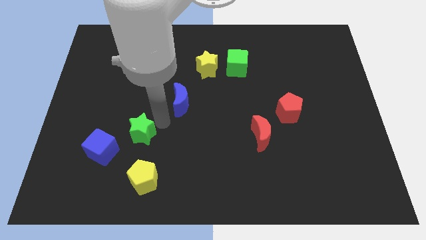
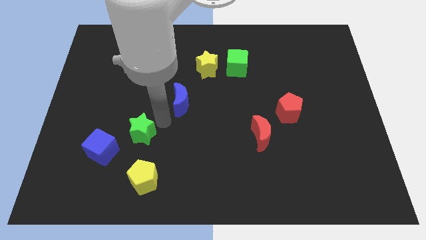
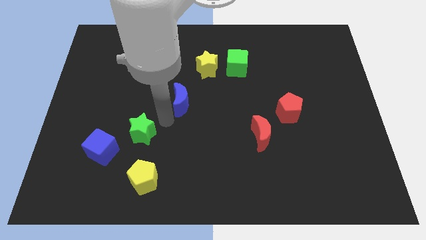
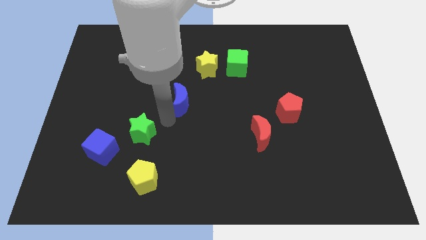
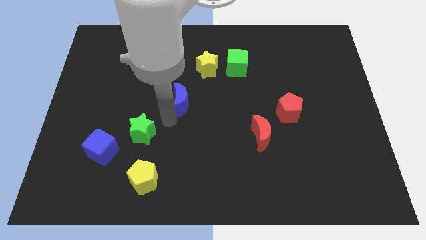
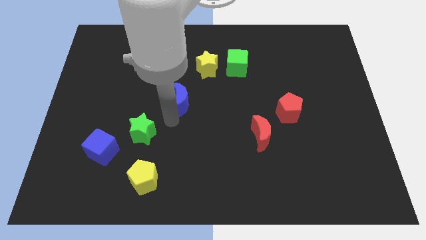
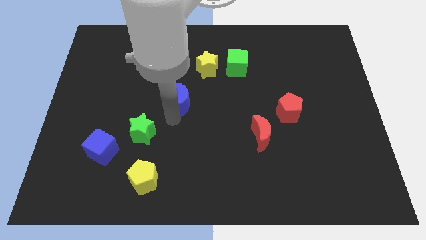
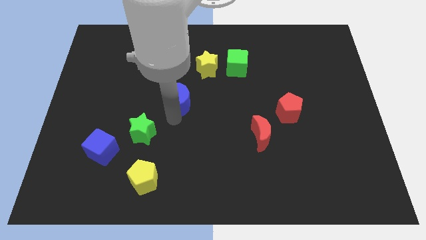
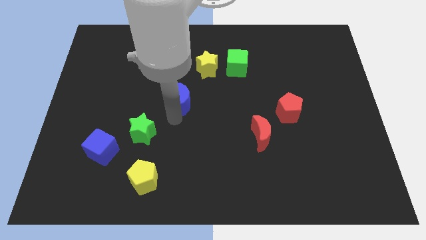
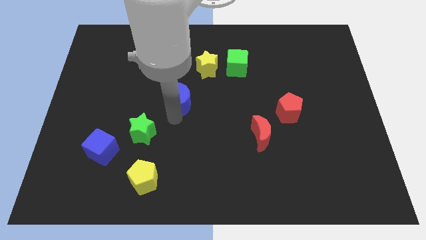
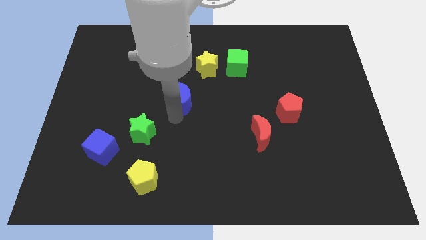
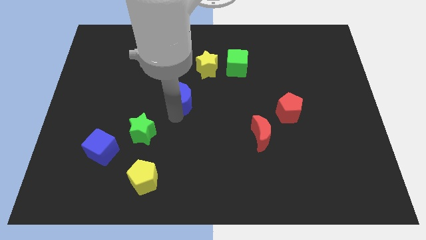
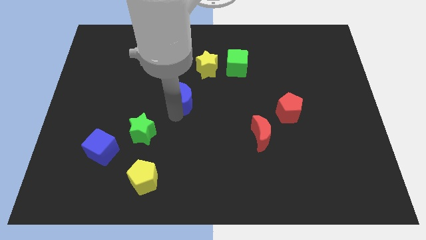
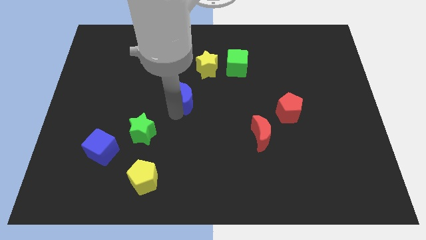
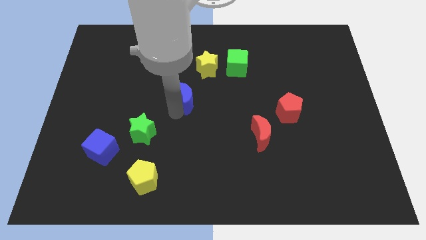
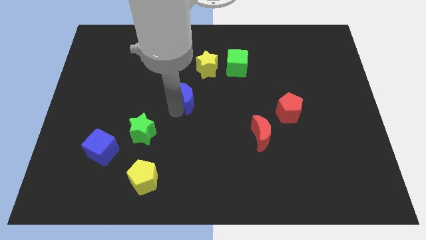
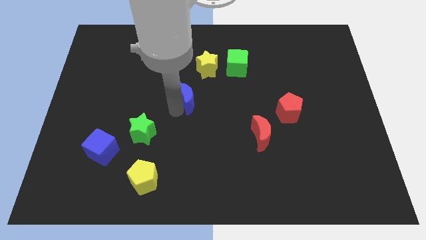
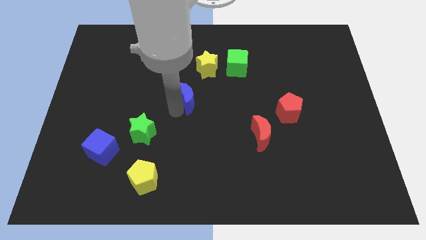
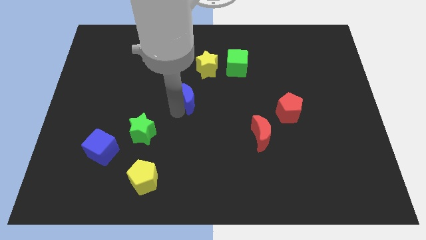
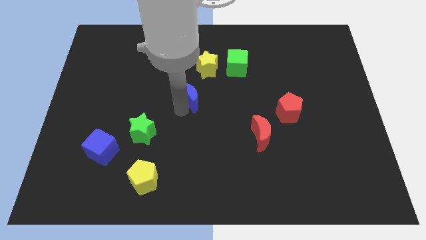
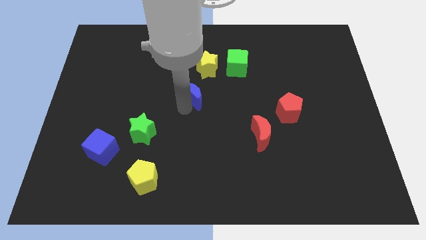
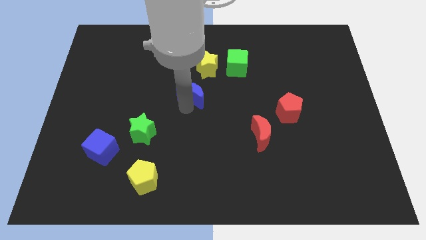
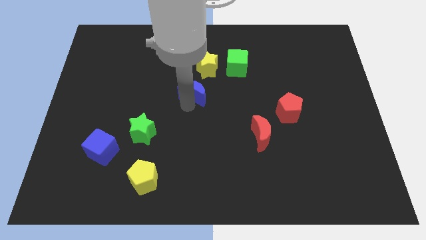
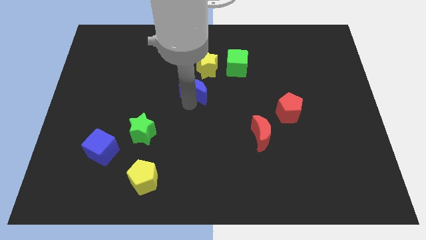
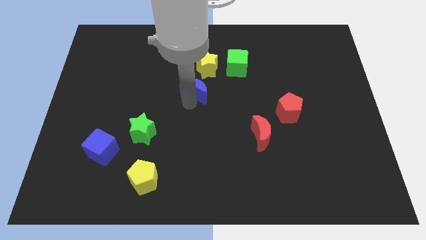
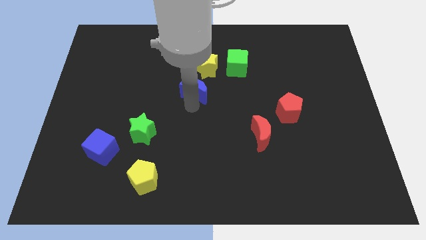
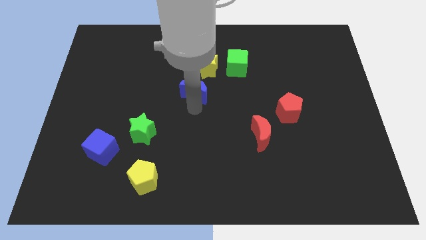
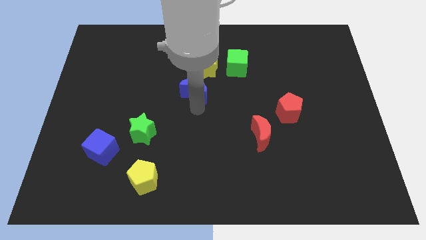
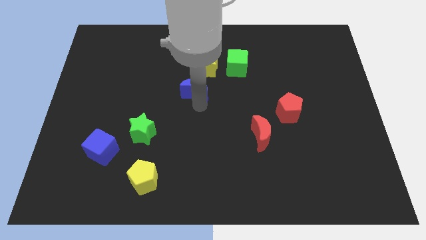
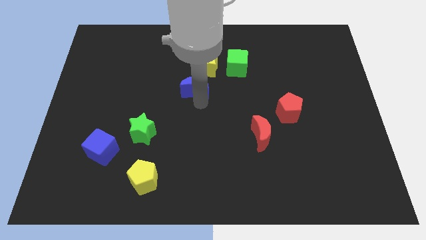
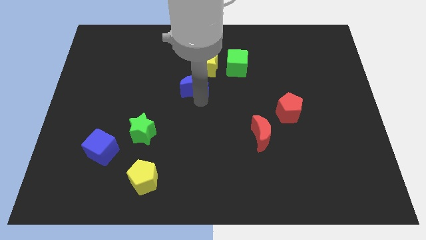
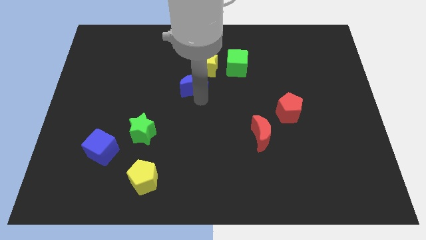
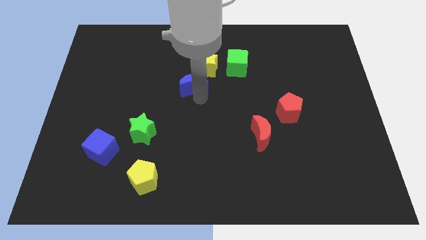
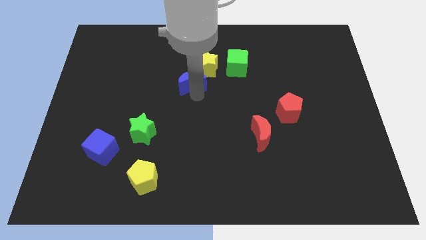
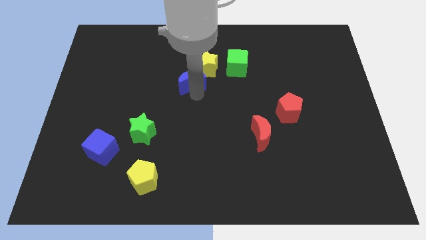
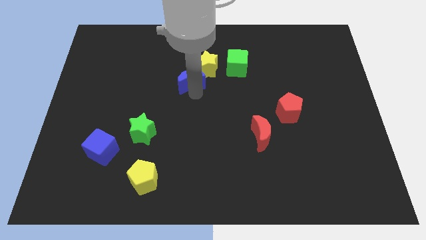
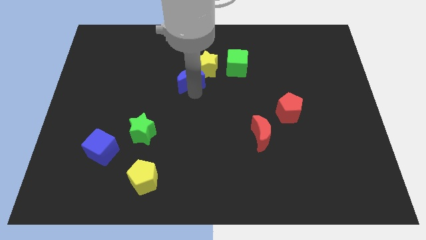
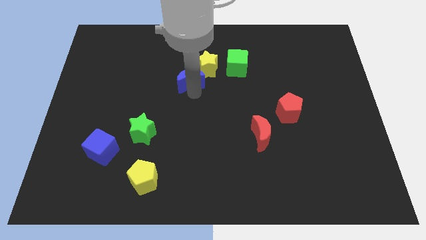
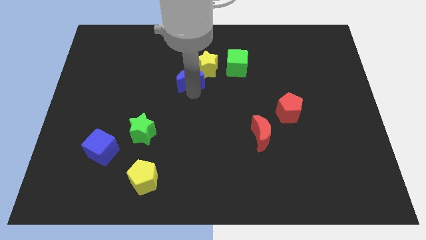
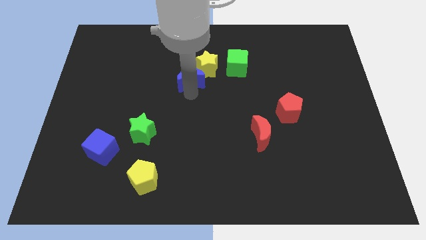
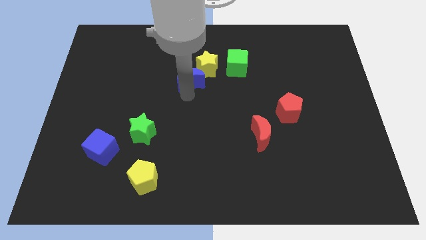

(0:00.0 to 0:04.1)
move the blue crescent into the yellow star

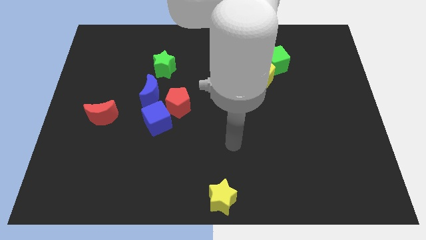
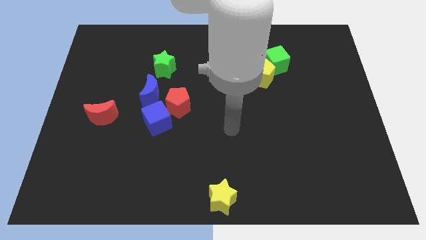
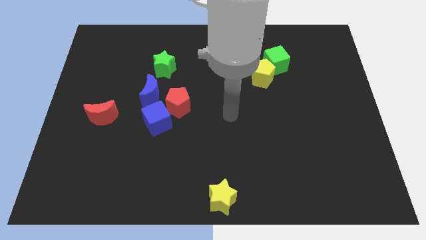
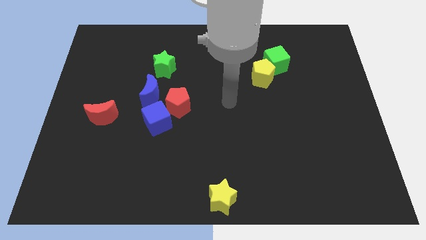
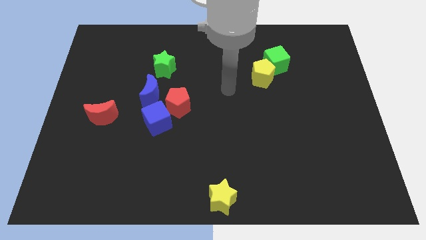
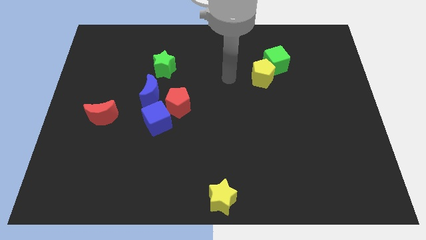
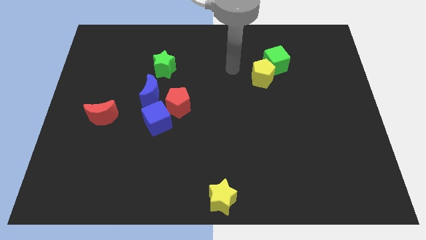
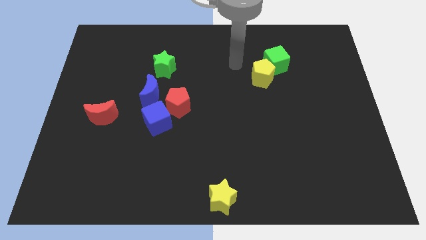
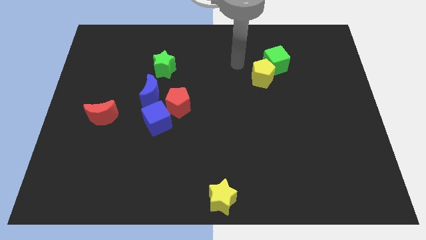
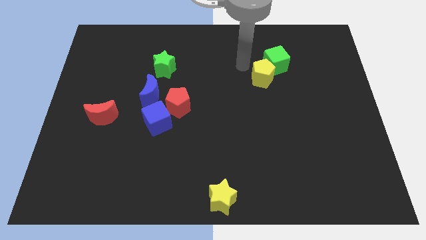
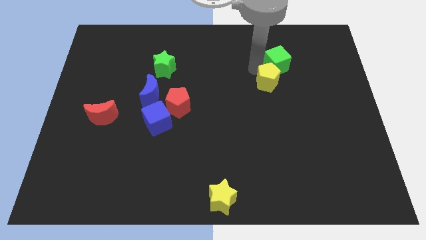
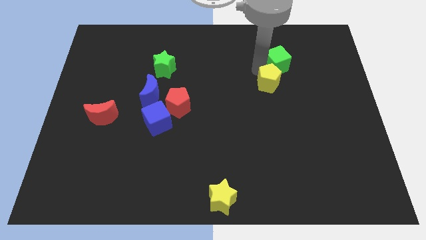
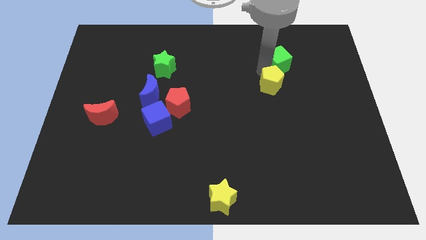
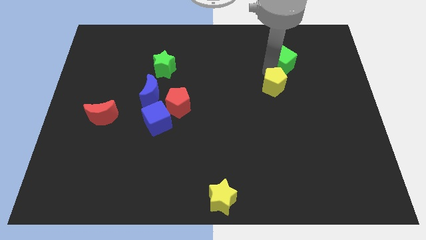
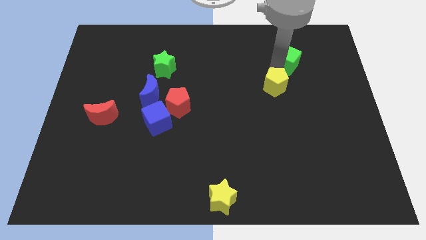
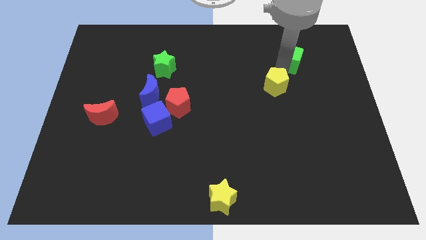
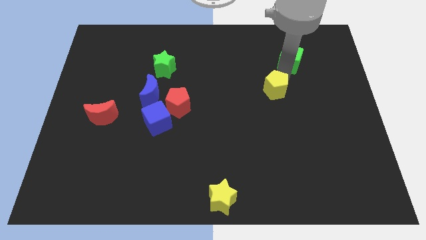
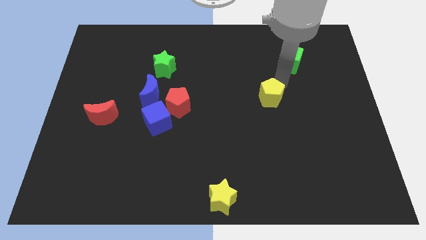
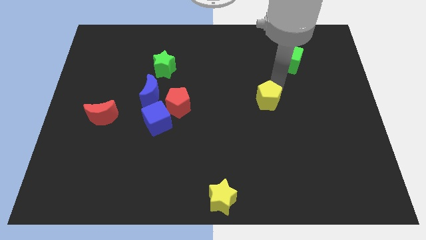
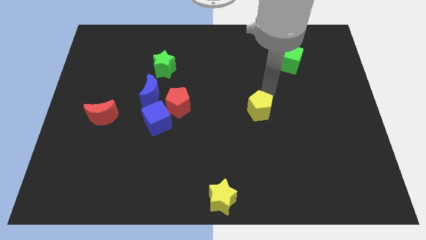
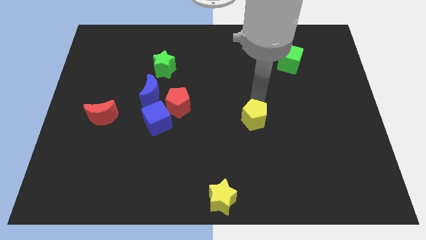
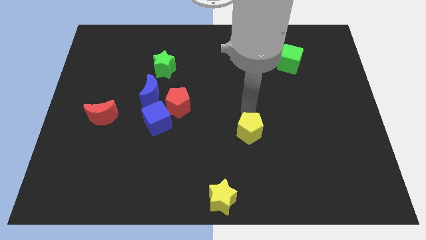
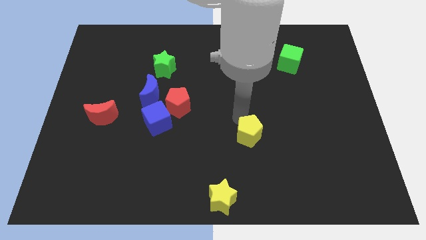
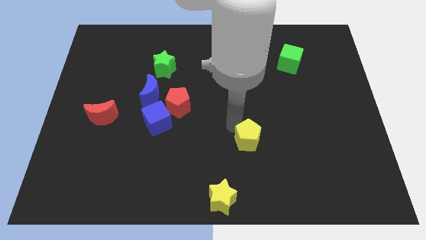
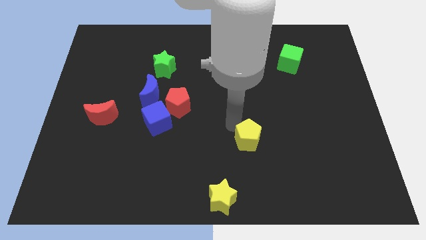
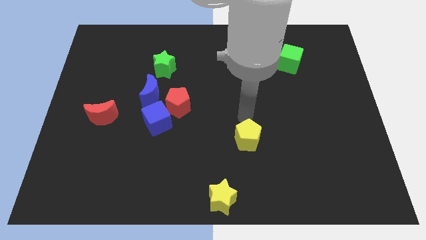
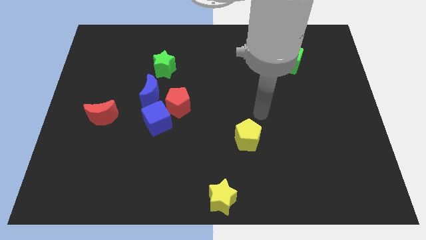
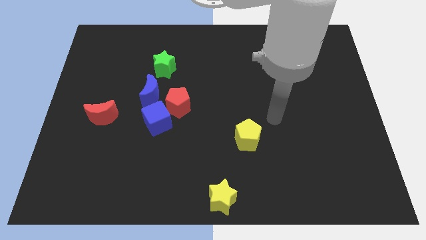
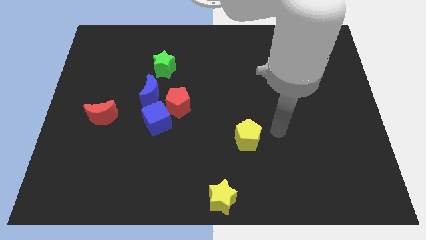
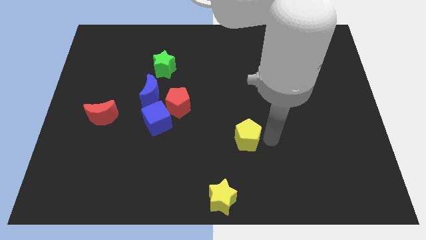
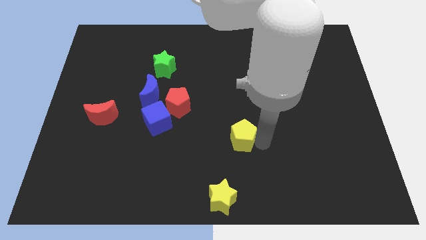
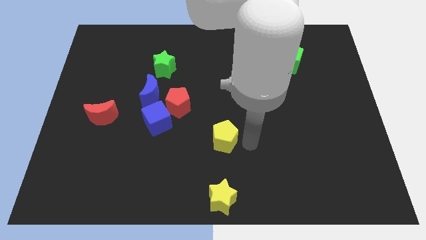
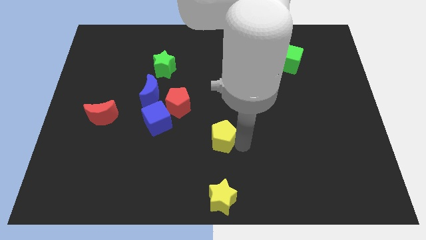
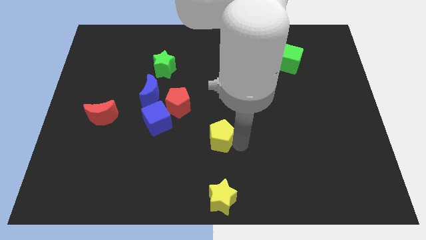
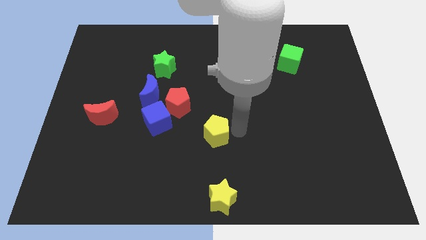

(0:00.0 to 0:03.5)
put the yellow pentagon vertically top of the yellow star

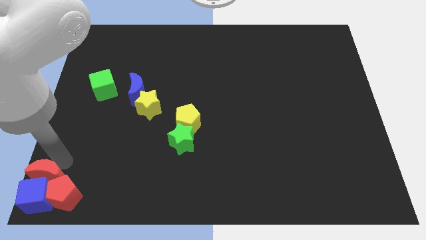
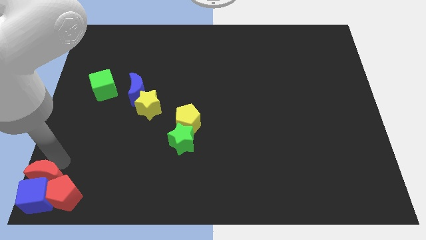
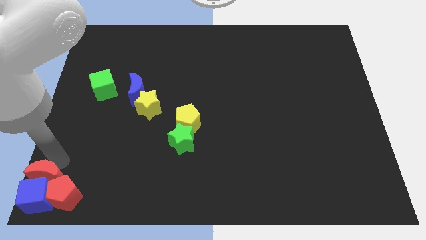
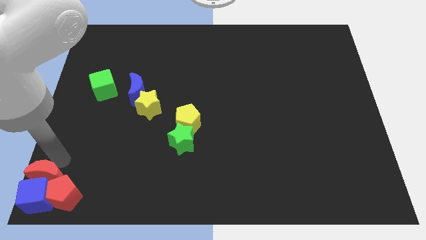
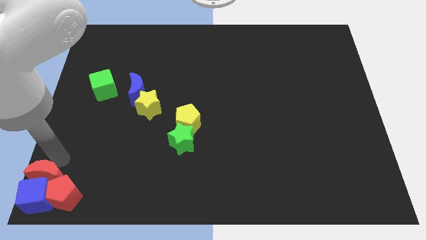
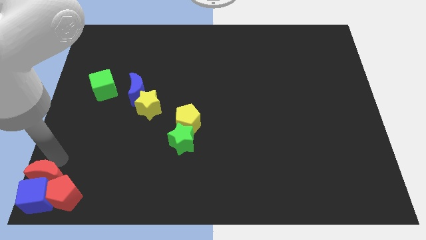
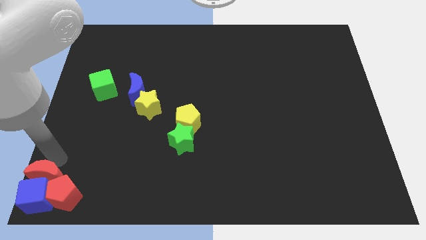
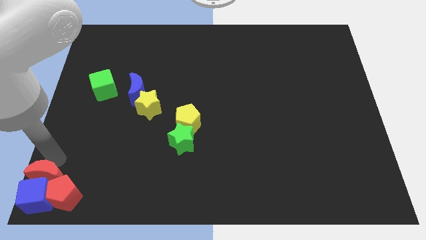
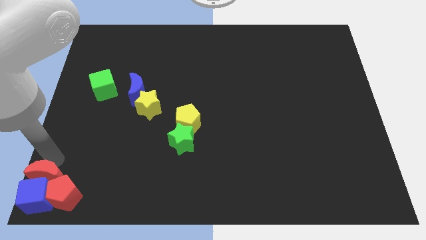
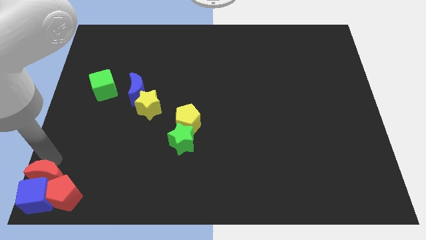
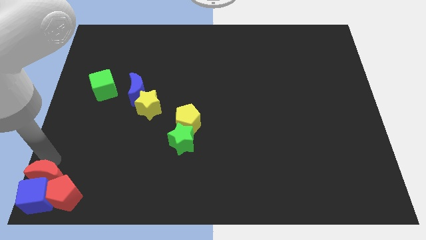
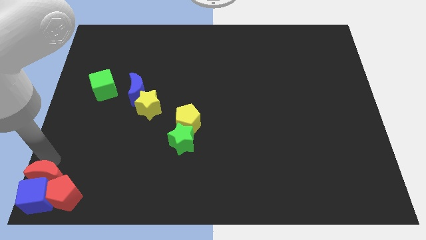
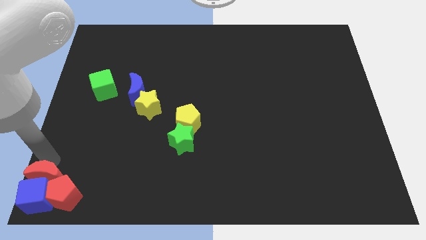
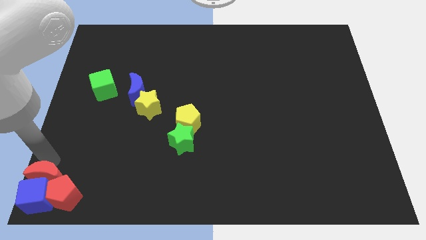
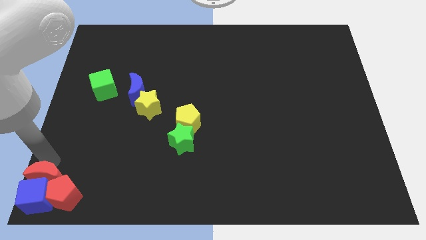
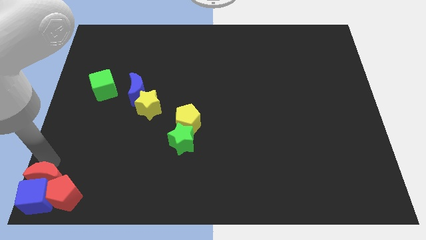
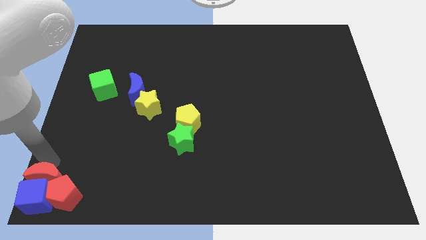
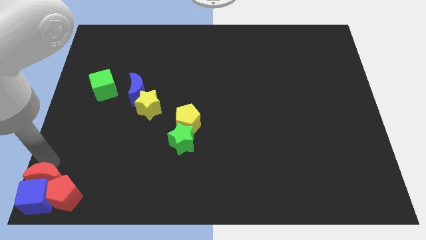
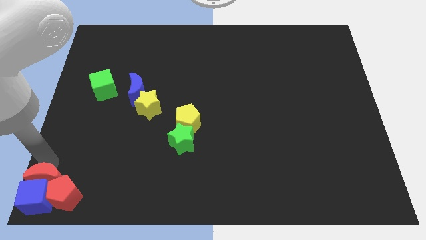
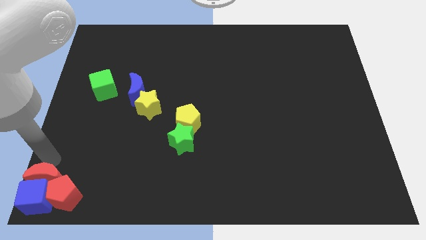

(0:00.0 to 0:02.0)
push the red moon into the blue cube
